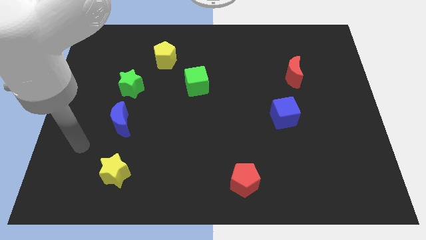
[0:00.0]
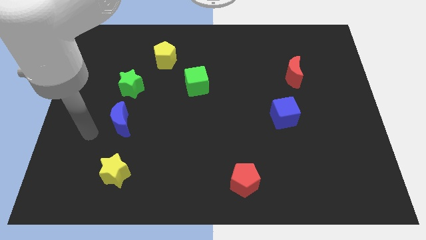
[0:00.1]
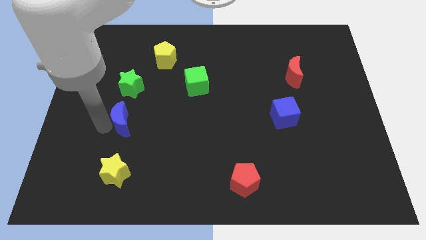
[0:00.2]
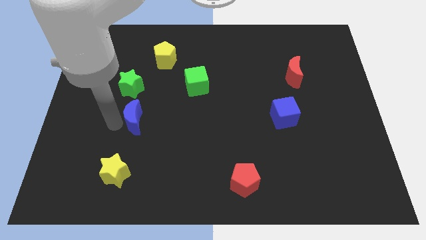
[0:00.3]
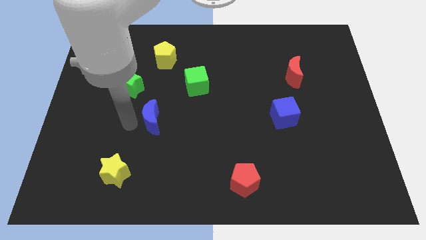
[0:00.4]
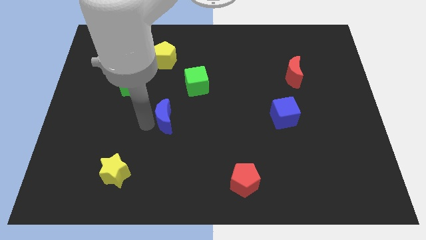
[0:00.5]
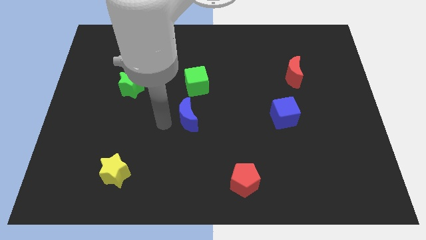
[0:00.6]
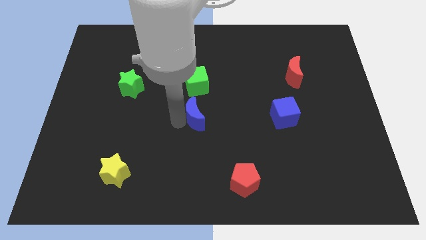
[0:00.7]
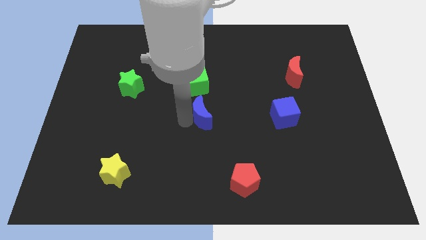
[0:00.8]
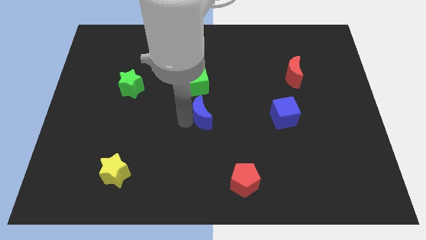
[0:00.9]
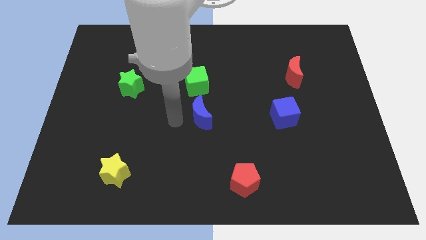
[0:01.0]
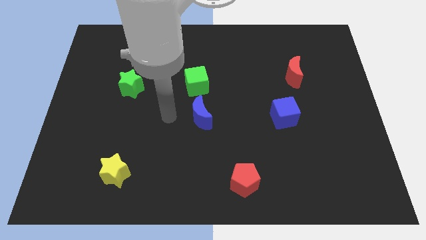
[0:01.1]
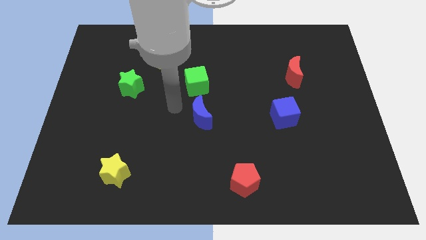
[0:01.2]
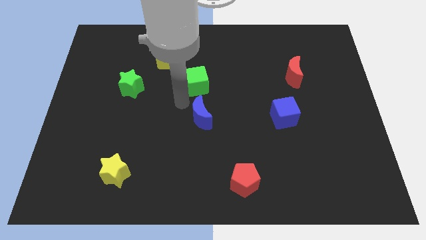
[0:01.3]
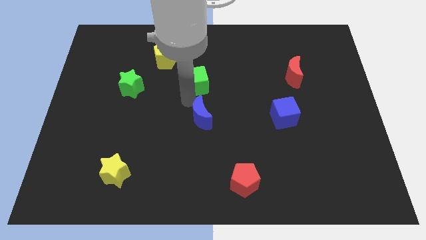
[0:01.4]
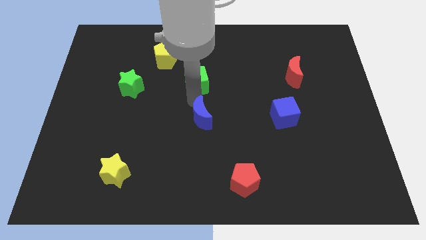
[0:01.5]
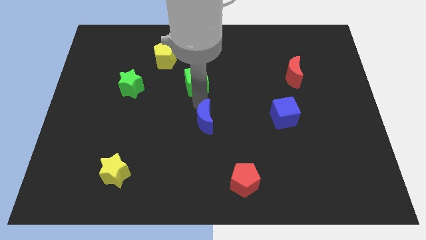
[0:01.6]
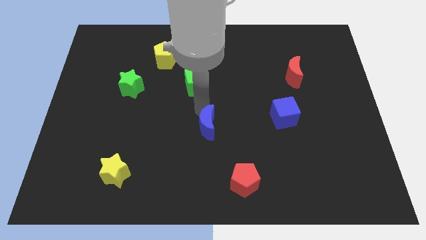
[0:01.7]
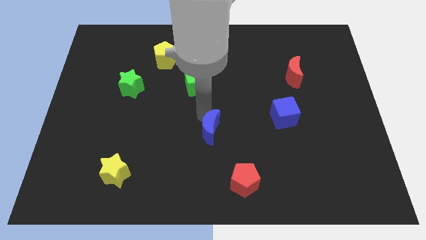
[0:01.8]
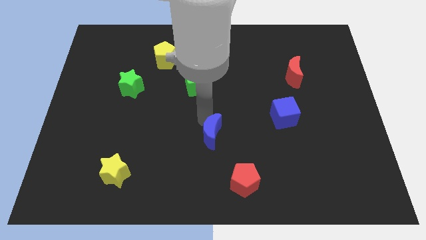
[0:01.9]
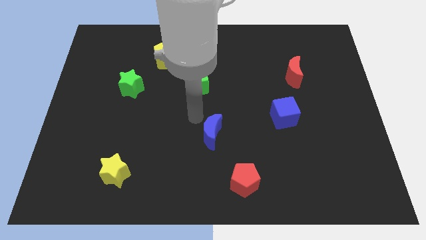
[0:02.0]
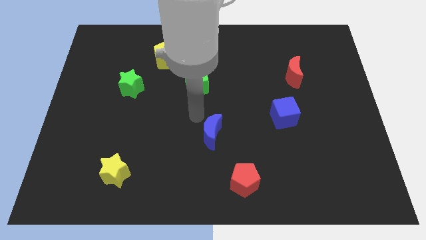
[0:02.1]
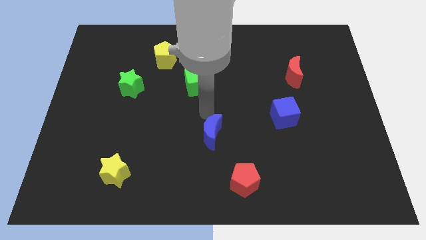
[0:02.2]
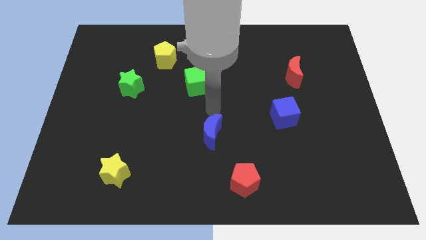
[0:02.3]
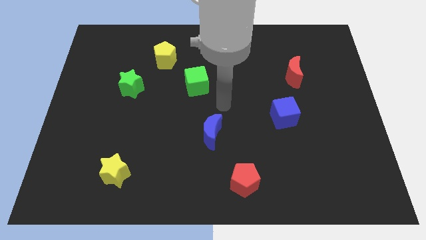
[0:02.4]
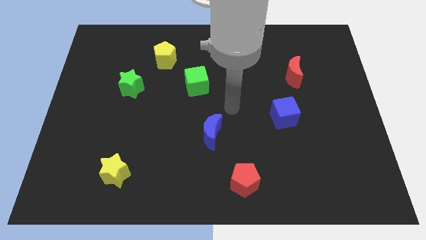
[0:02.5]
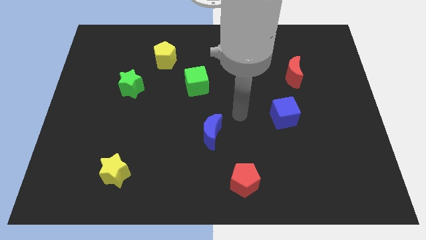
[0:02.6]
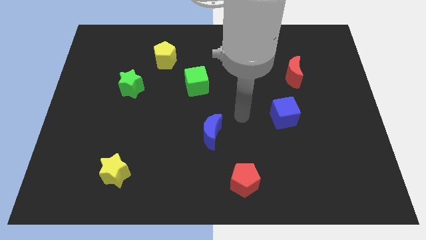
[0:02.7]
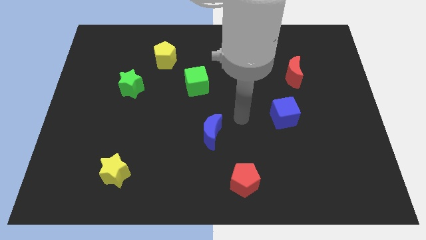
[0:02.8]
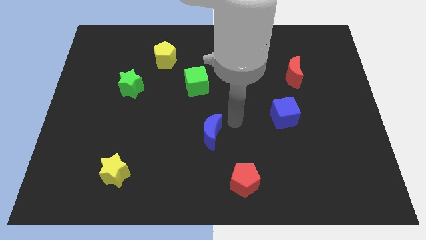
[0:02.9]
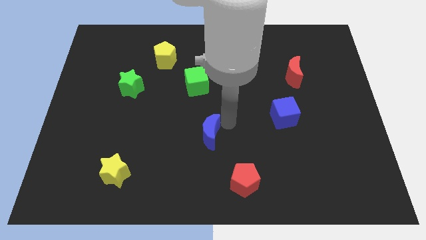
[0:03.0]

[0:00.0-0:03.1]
push the blue moon to the center of the board

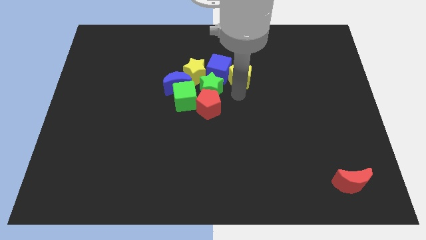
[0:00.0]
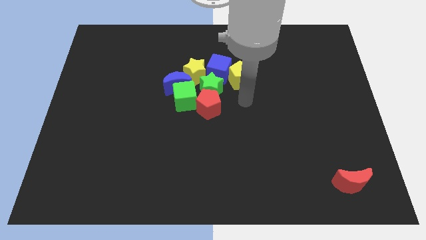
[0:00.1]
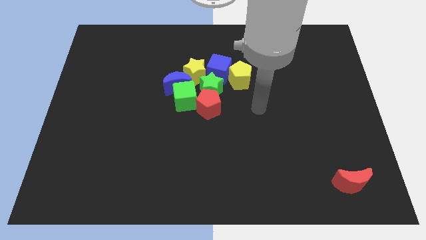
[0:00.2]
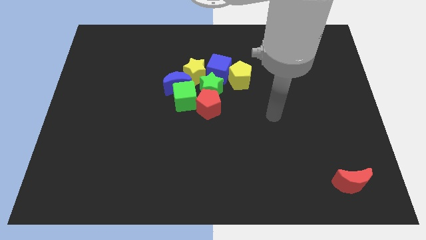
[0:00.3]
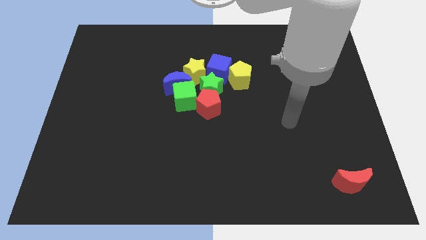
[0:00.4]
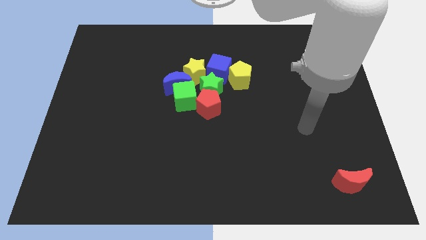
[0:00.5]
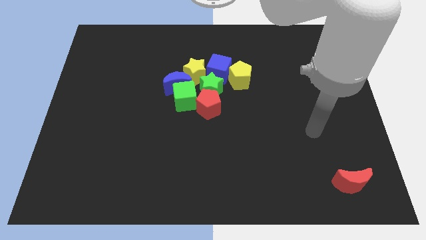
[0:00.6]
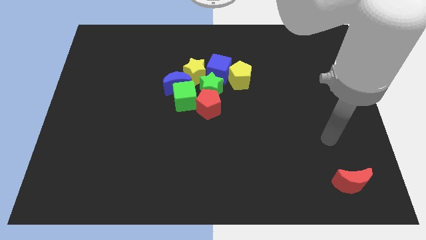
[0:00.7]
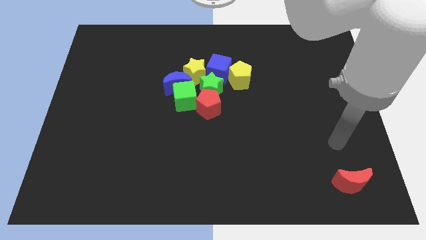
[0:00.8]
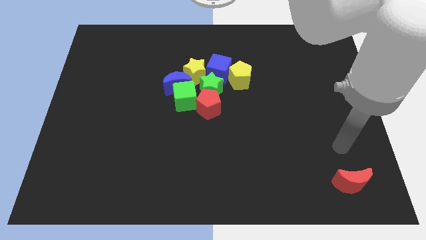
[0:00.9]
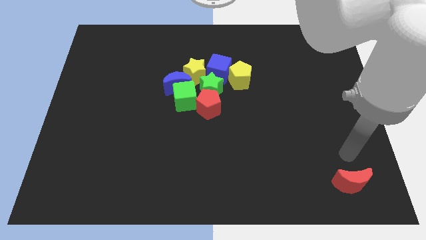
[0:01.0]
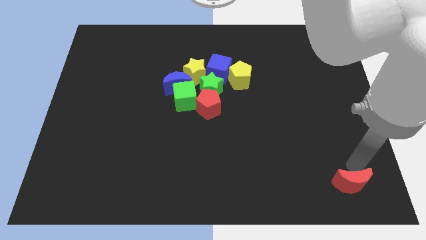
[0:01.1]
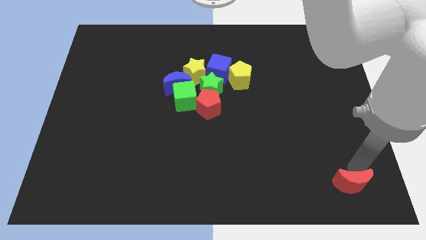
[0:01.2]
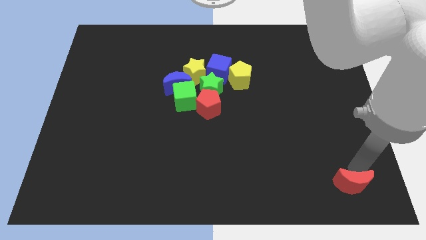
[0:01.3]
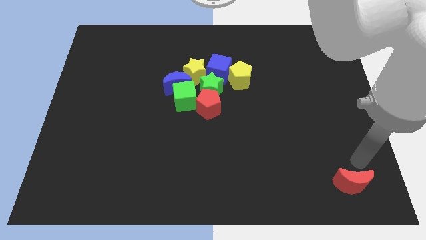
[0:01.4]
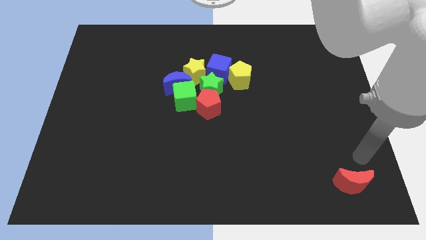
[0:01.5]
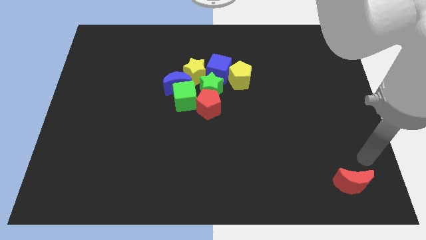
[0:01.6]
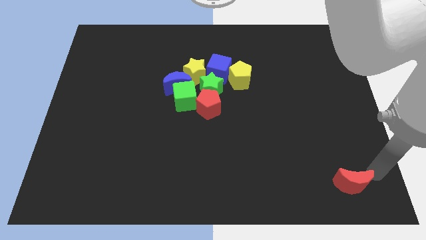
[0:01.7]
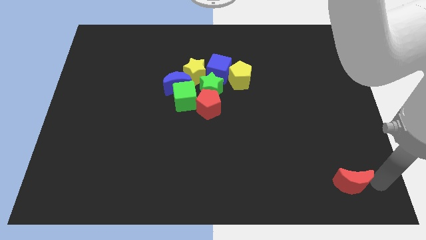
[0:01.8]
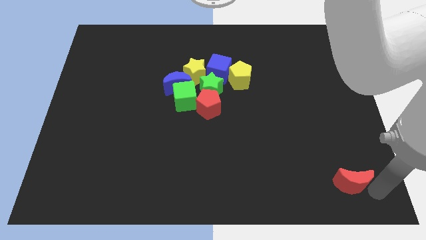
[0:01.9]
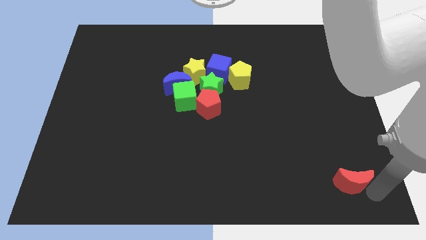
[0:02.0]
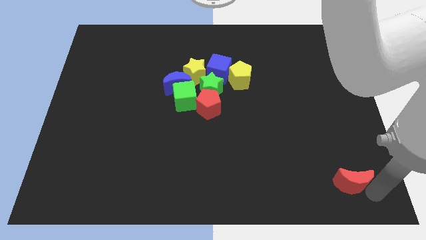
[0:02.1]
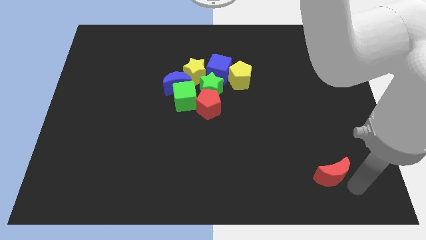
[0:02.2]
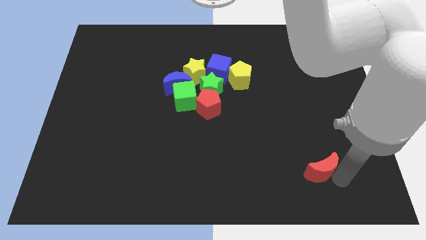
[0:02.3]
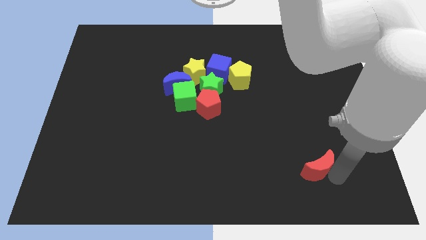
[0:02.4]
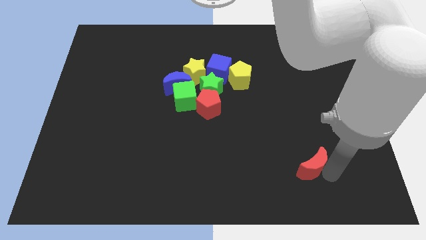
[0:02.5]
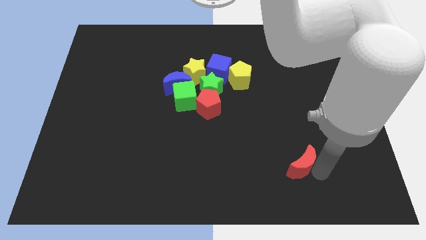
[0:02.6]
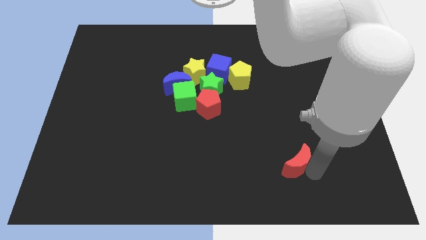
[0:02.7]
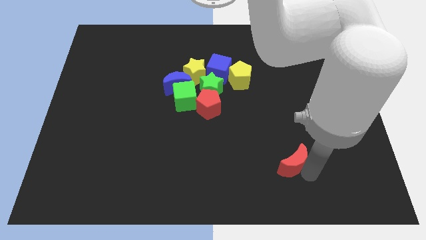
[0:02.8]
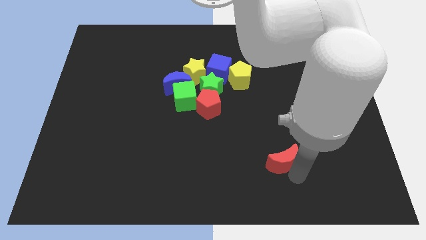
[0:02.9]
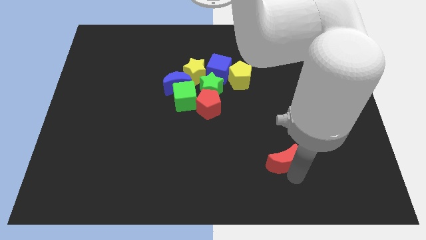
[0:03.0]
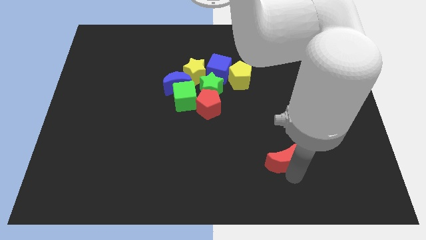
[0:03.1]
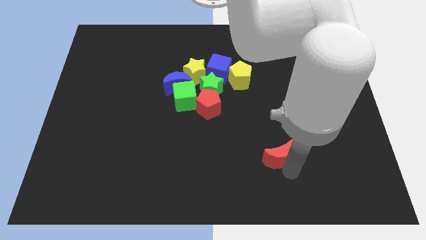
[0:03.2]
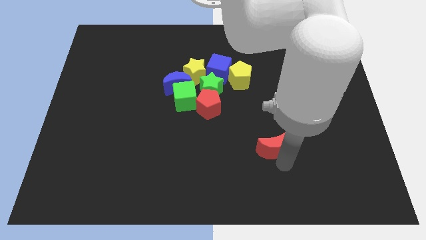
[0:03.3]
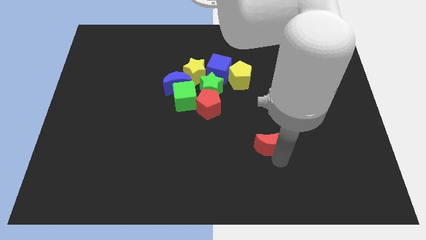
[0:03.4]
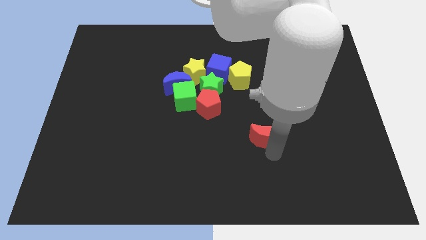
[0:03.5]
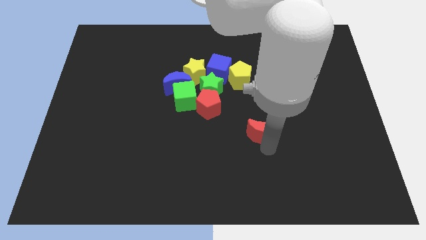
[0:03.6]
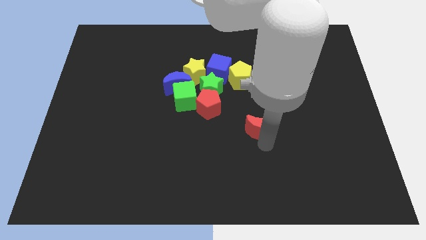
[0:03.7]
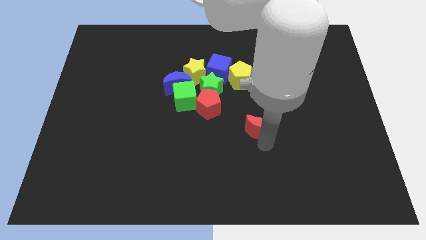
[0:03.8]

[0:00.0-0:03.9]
push the red moon towards the group of blocks

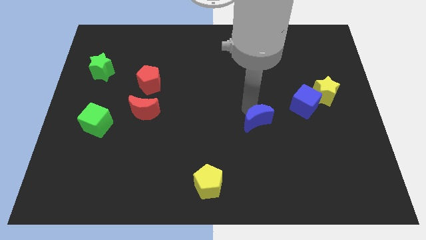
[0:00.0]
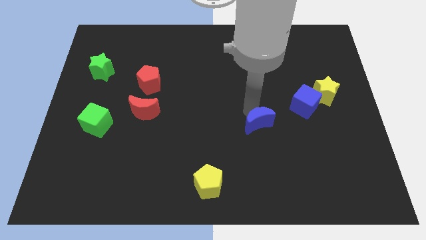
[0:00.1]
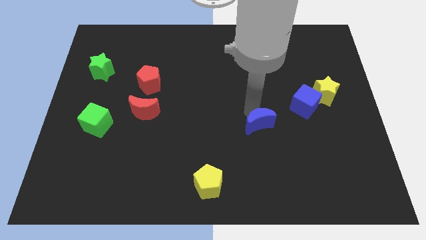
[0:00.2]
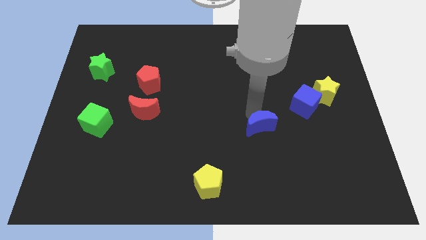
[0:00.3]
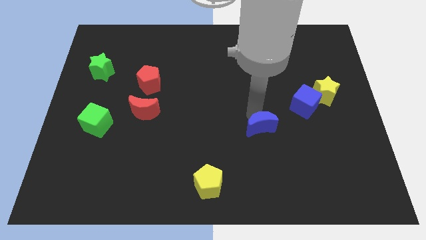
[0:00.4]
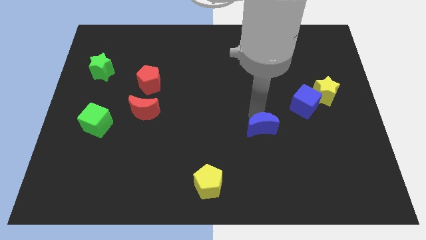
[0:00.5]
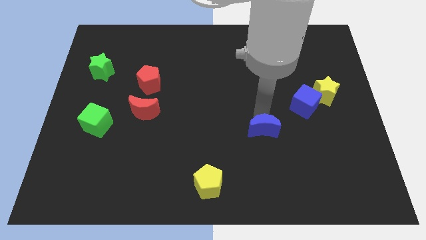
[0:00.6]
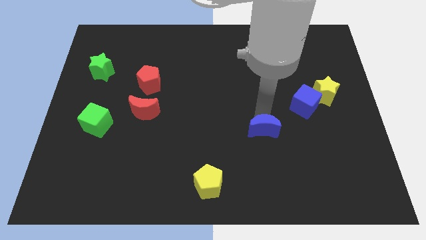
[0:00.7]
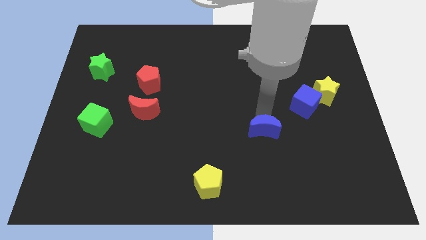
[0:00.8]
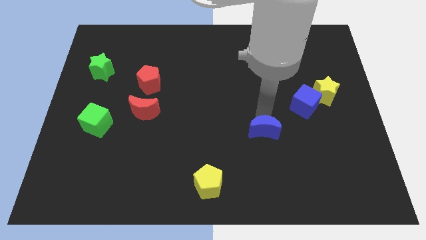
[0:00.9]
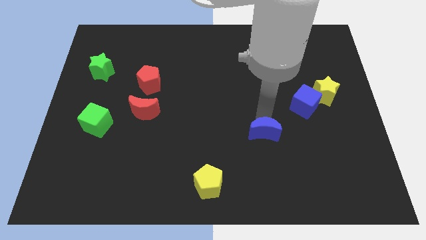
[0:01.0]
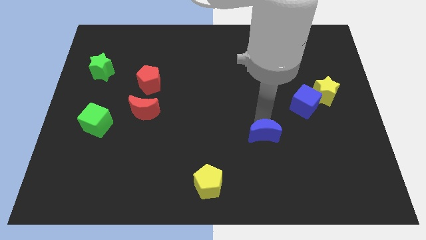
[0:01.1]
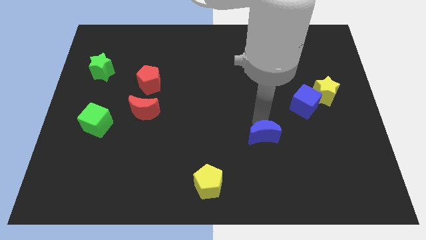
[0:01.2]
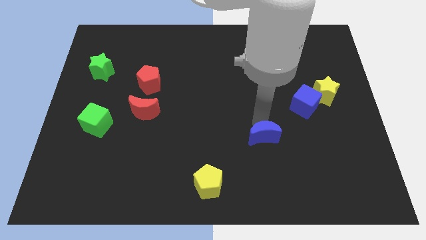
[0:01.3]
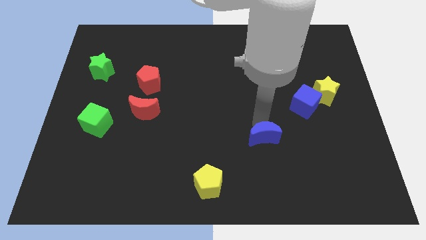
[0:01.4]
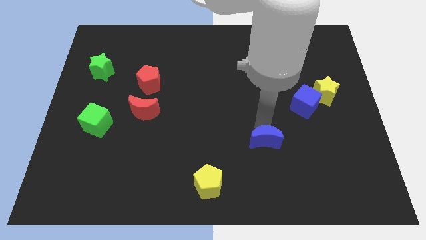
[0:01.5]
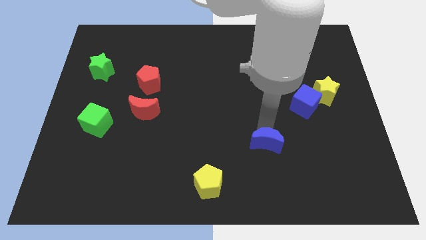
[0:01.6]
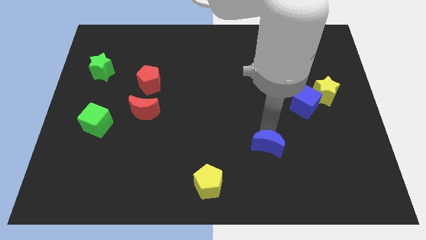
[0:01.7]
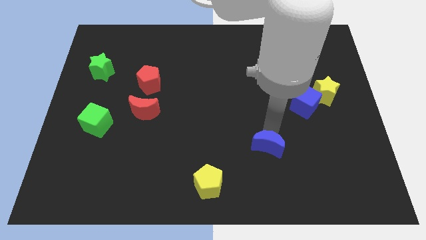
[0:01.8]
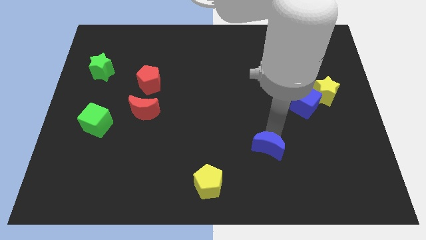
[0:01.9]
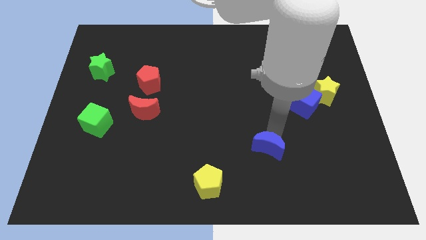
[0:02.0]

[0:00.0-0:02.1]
place the blue moon diagonally to the yellow pentagon
